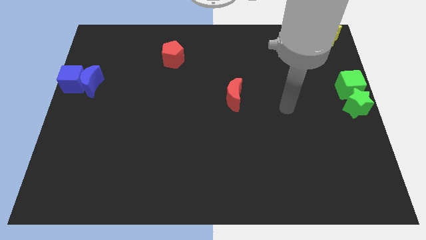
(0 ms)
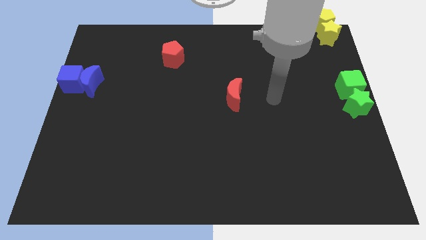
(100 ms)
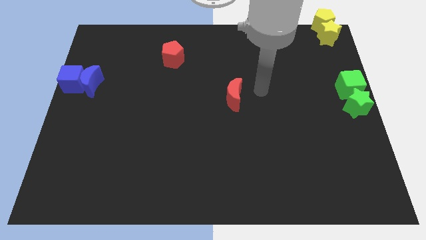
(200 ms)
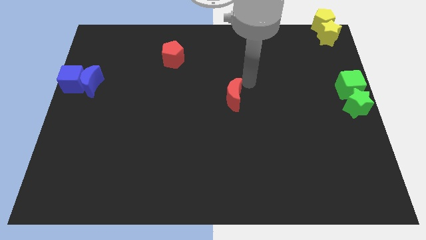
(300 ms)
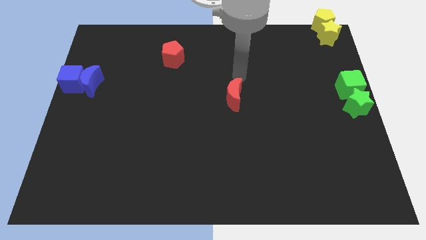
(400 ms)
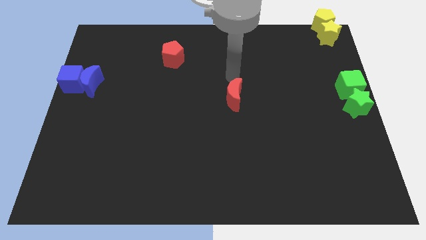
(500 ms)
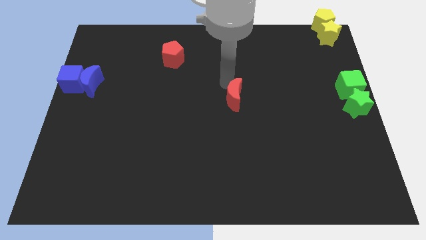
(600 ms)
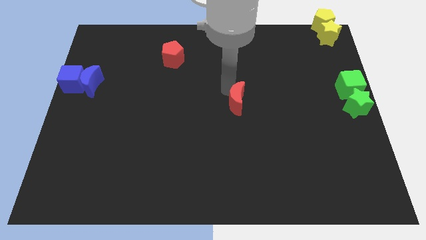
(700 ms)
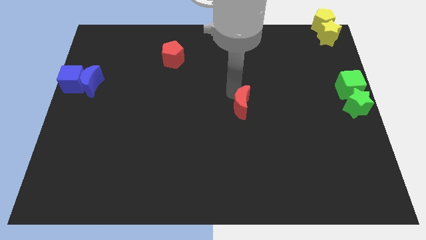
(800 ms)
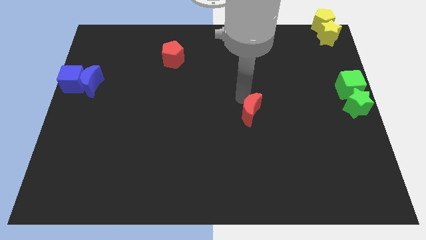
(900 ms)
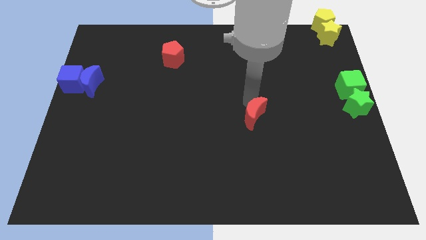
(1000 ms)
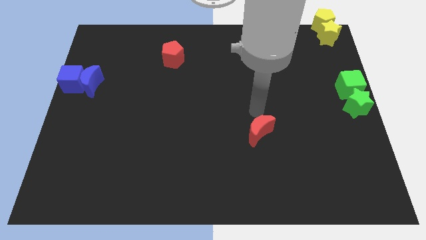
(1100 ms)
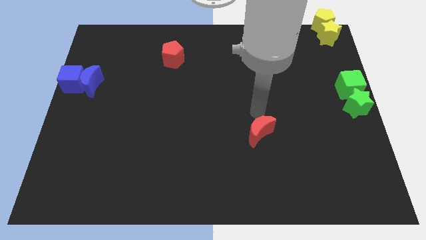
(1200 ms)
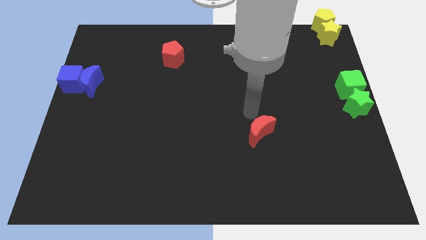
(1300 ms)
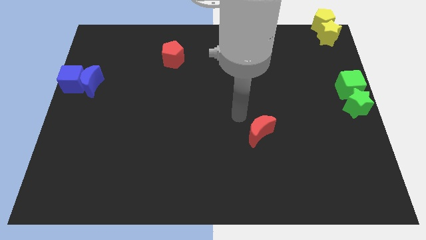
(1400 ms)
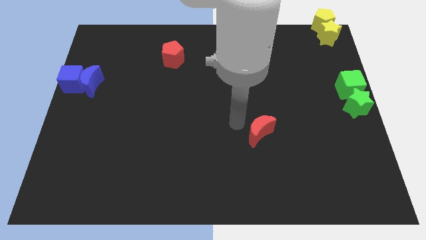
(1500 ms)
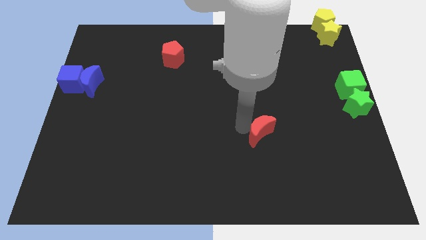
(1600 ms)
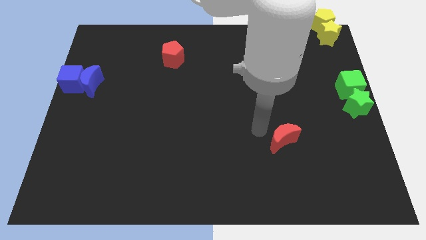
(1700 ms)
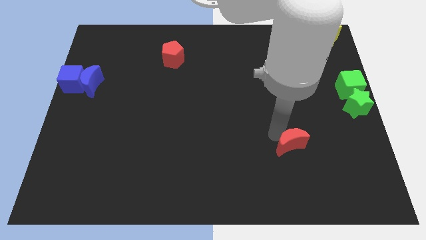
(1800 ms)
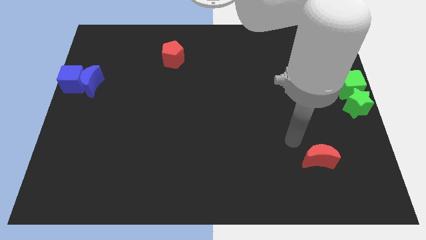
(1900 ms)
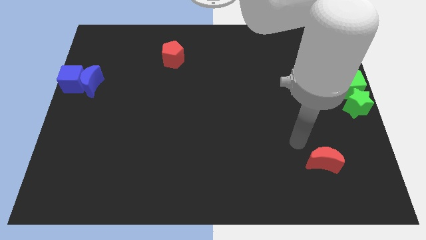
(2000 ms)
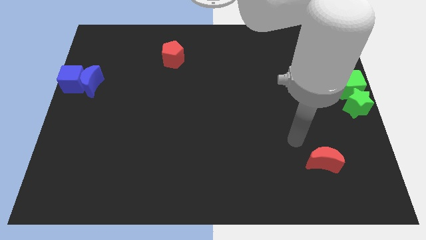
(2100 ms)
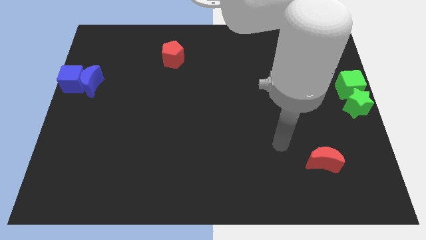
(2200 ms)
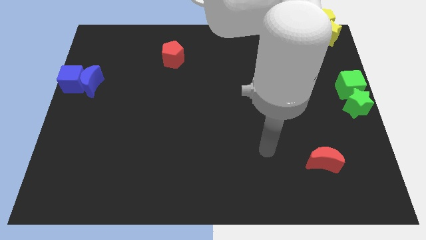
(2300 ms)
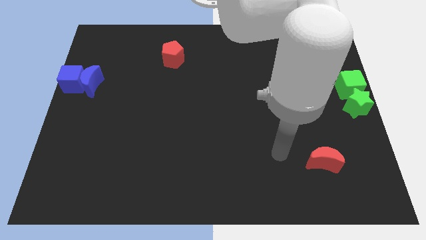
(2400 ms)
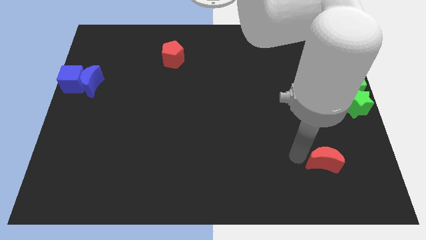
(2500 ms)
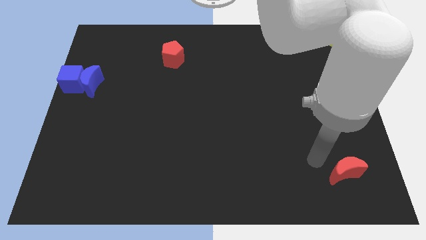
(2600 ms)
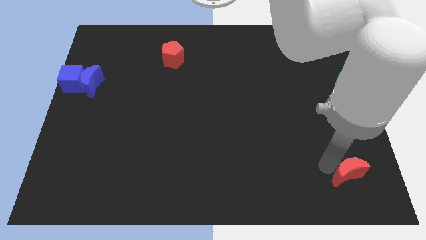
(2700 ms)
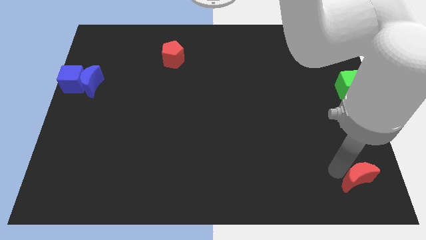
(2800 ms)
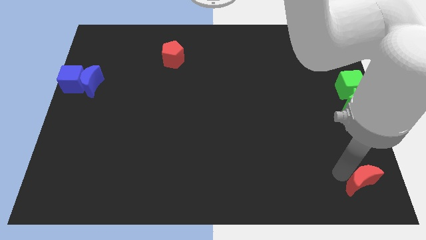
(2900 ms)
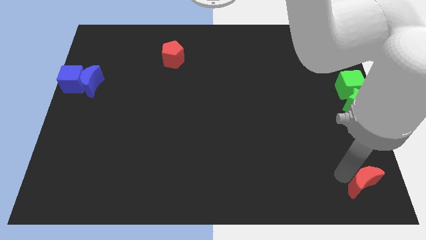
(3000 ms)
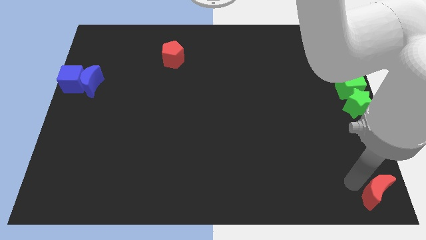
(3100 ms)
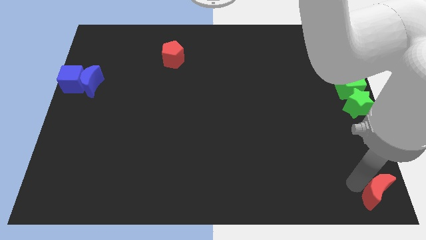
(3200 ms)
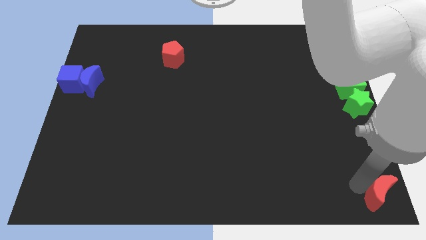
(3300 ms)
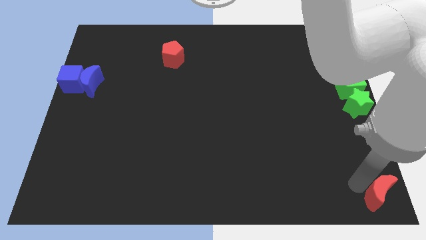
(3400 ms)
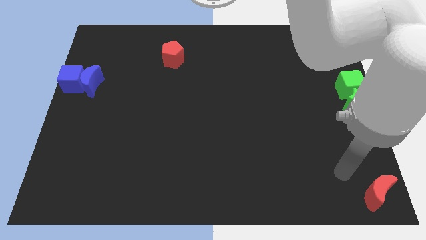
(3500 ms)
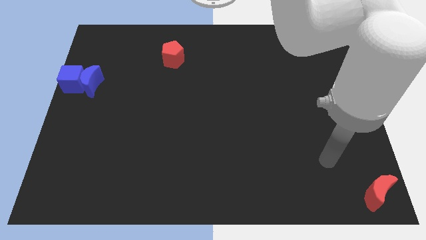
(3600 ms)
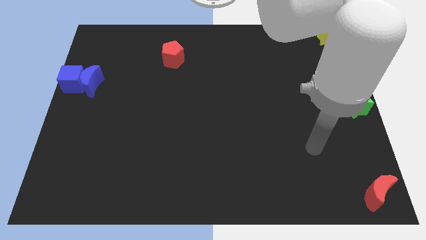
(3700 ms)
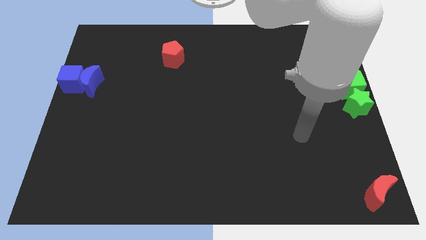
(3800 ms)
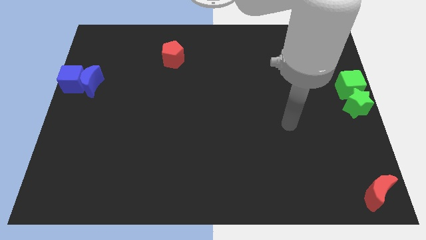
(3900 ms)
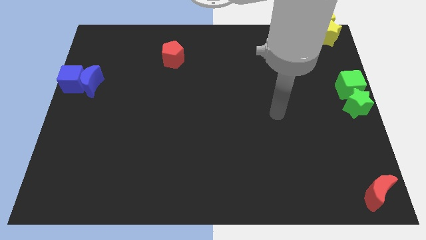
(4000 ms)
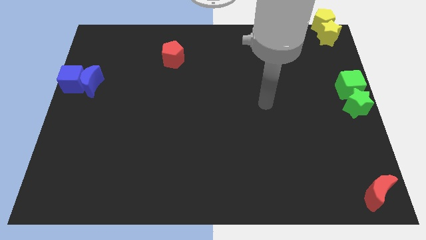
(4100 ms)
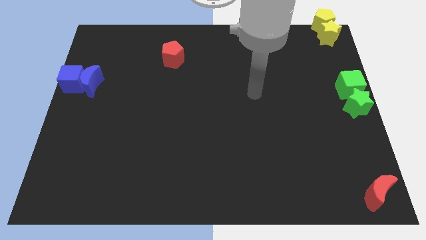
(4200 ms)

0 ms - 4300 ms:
push the red crescent to the bottom right of the board

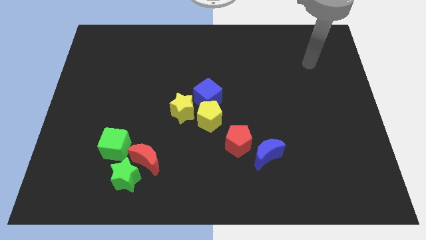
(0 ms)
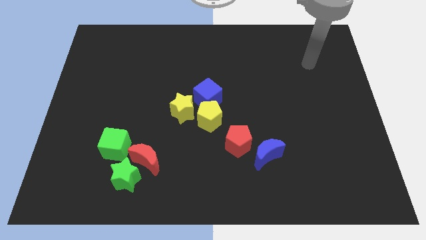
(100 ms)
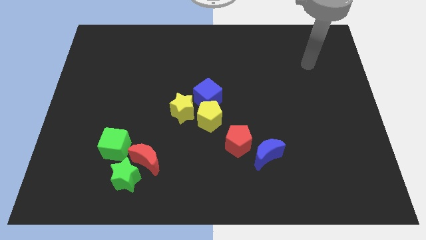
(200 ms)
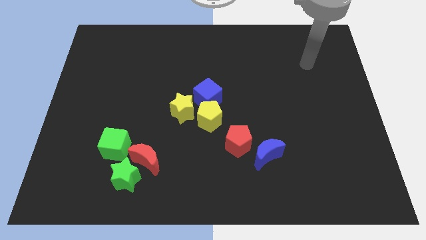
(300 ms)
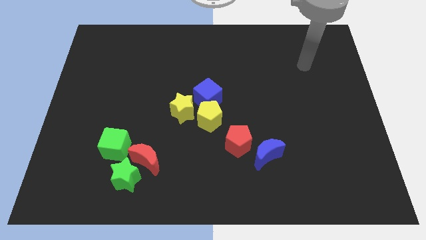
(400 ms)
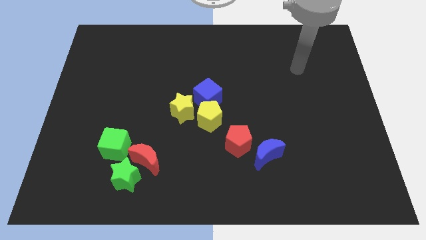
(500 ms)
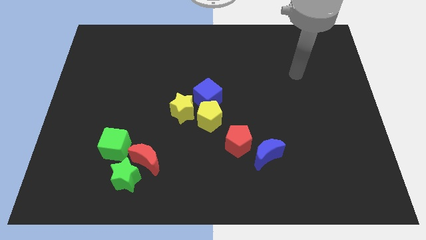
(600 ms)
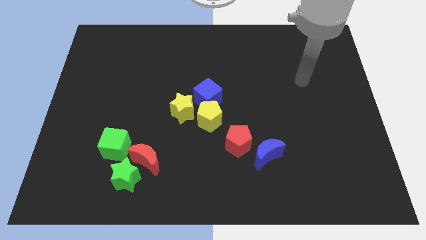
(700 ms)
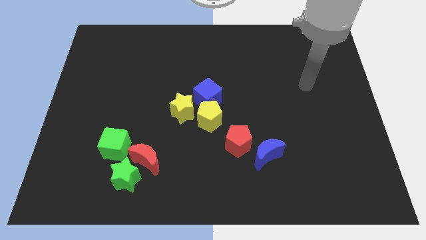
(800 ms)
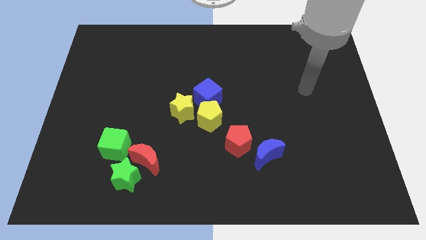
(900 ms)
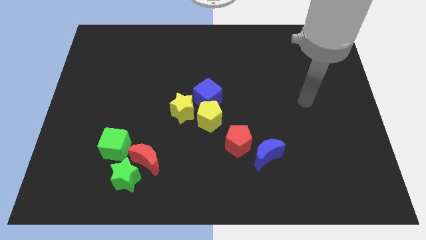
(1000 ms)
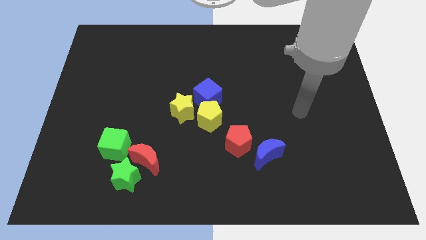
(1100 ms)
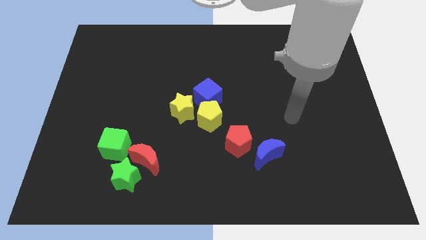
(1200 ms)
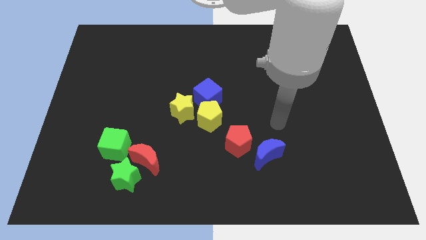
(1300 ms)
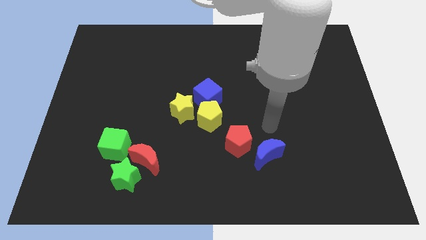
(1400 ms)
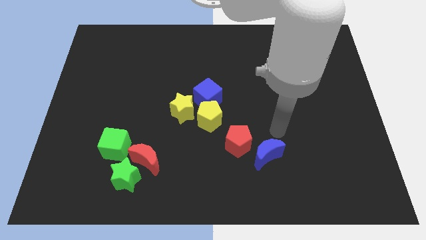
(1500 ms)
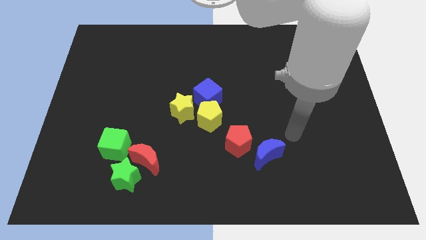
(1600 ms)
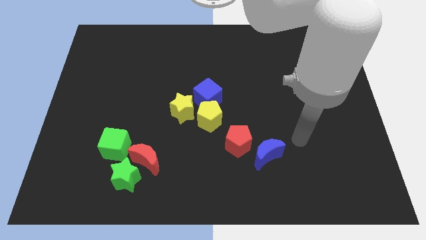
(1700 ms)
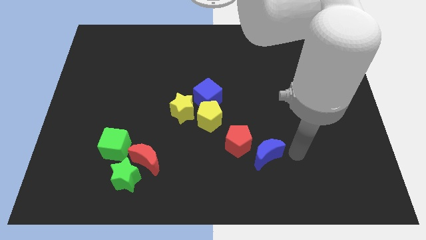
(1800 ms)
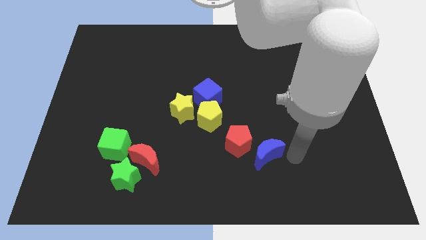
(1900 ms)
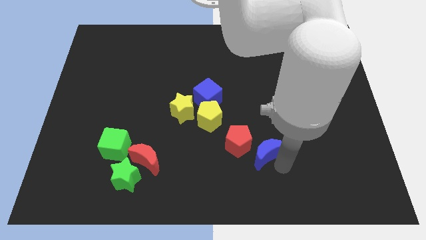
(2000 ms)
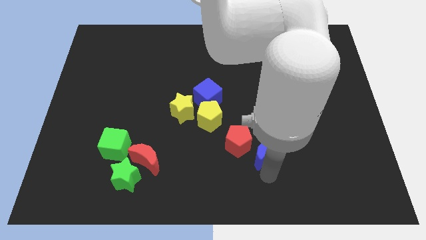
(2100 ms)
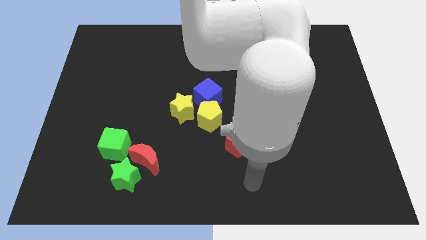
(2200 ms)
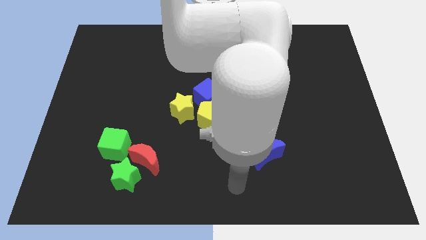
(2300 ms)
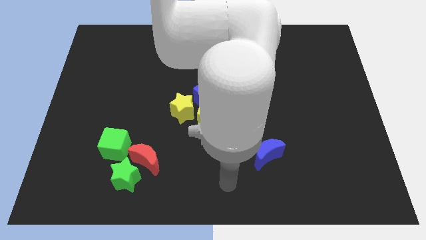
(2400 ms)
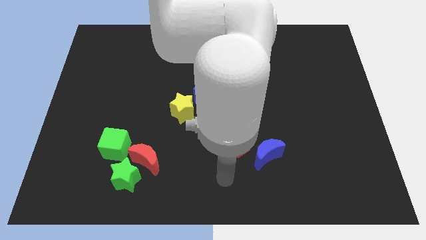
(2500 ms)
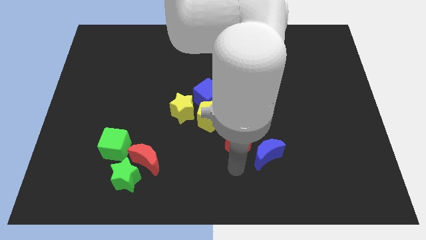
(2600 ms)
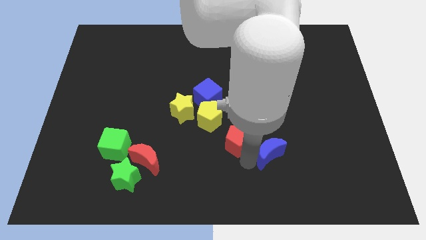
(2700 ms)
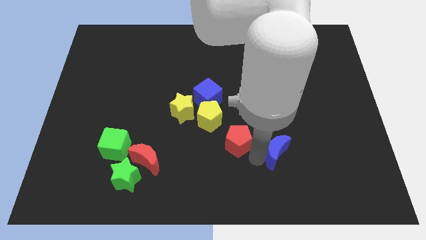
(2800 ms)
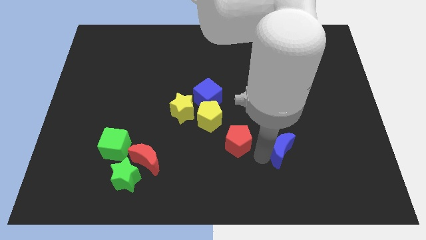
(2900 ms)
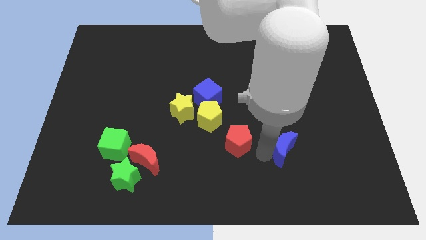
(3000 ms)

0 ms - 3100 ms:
move the arm into the blue crescent

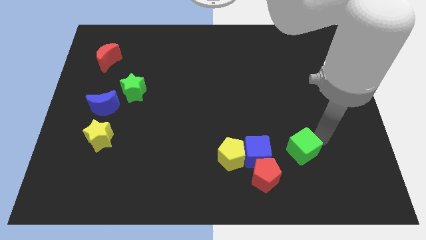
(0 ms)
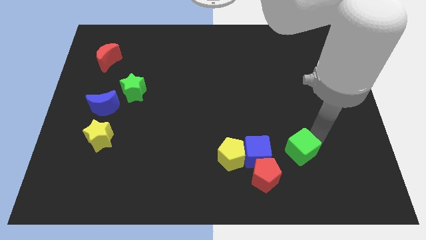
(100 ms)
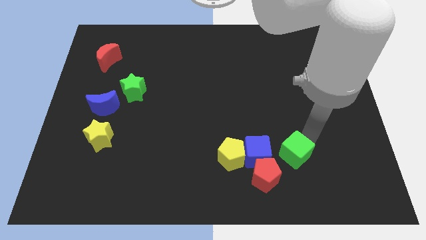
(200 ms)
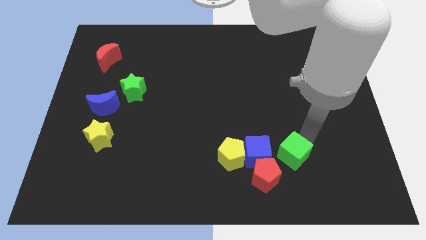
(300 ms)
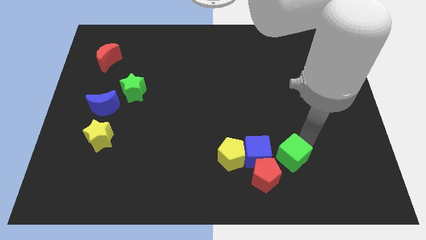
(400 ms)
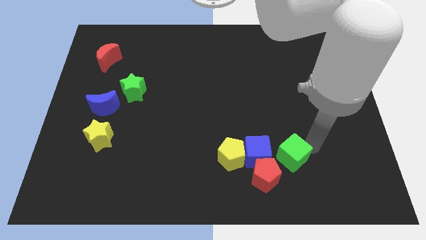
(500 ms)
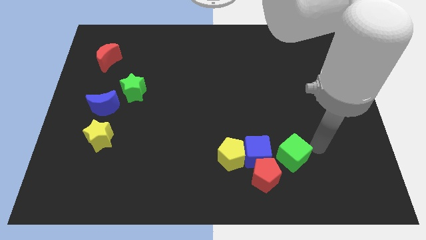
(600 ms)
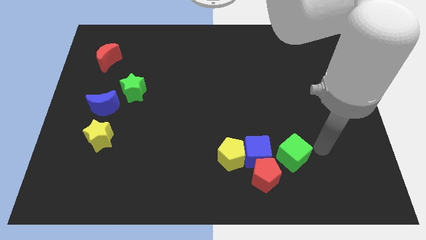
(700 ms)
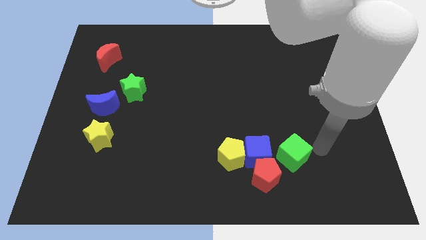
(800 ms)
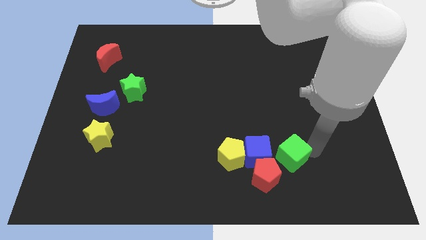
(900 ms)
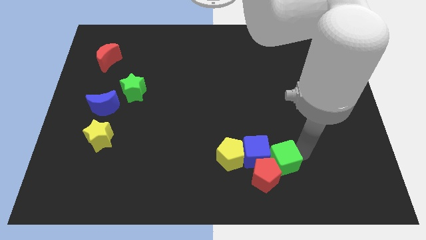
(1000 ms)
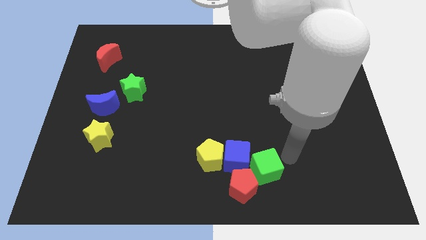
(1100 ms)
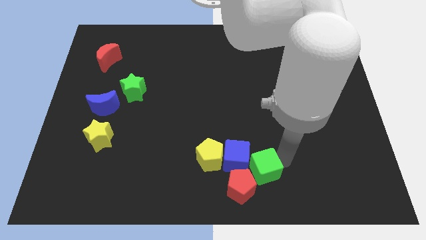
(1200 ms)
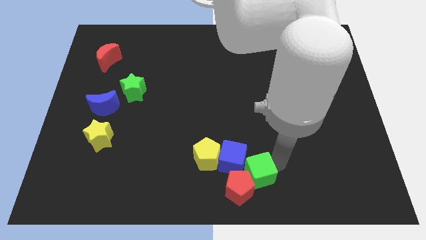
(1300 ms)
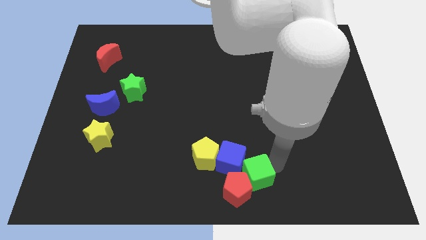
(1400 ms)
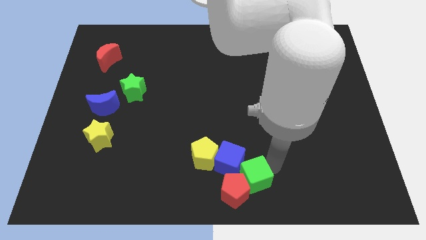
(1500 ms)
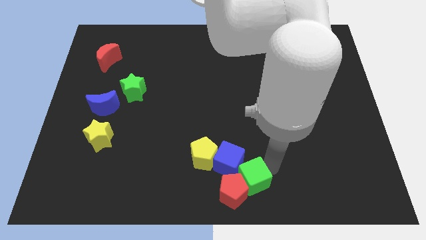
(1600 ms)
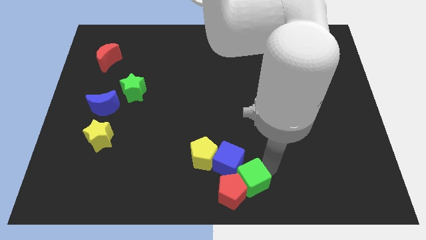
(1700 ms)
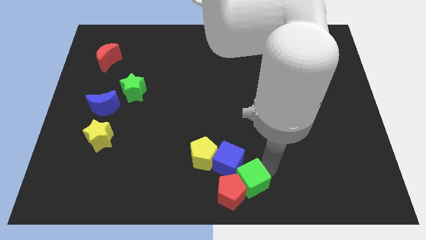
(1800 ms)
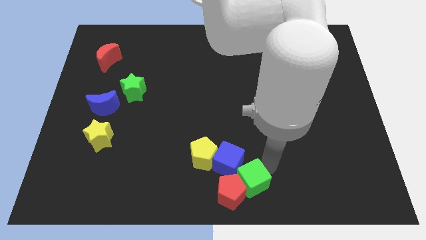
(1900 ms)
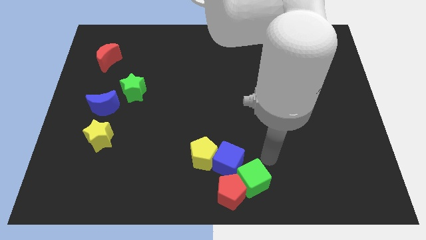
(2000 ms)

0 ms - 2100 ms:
move the green cube close to red pentagon
